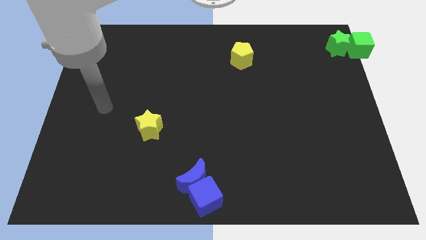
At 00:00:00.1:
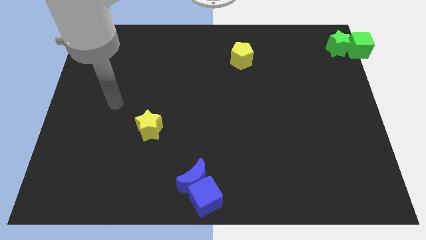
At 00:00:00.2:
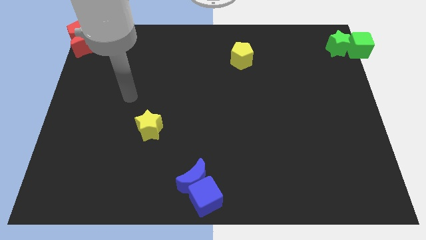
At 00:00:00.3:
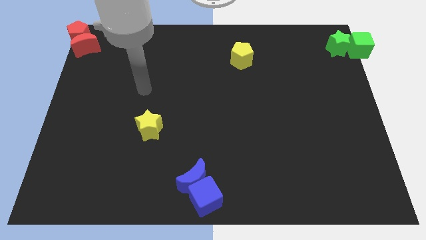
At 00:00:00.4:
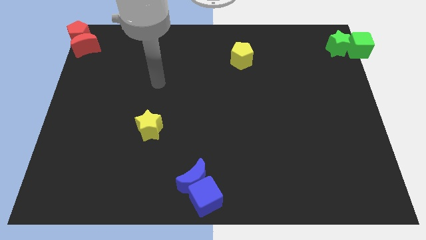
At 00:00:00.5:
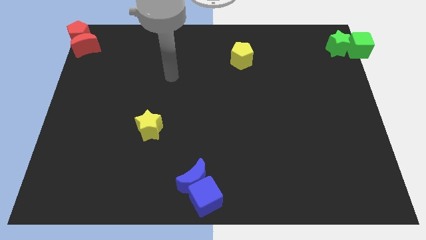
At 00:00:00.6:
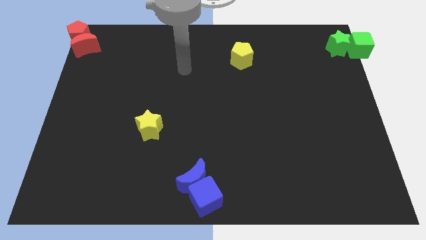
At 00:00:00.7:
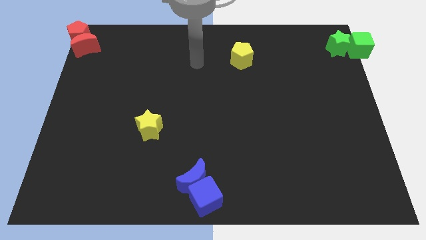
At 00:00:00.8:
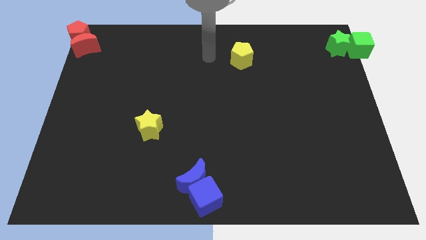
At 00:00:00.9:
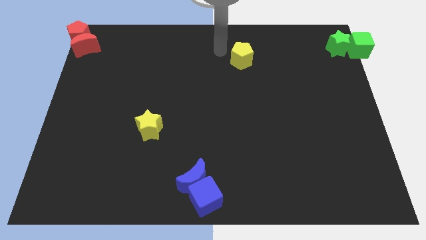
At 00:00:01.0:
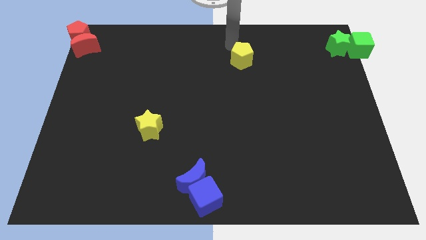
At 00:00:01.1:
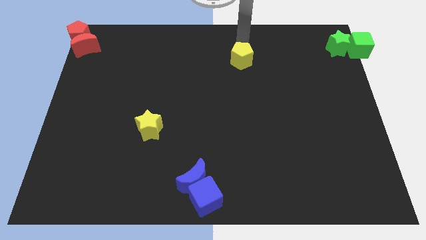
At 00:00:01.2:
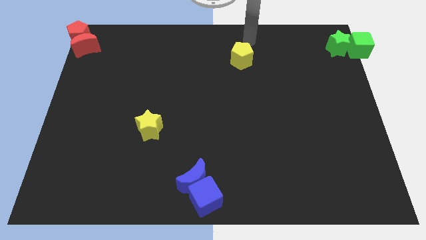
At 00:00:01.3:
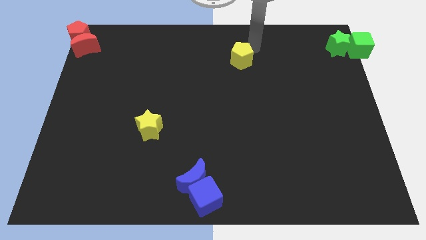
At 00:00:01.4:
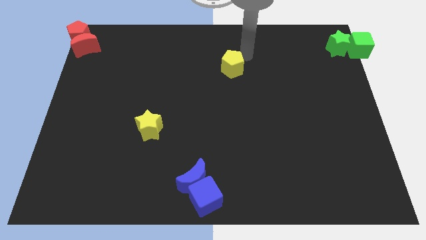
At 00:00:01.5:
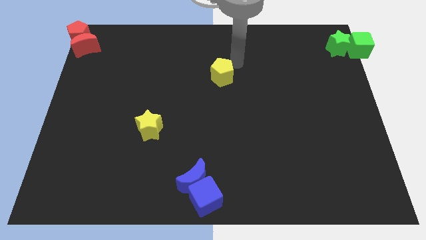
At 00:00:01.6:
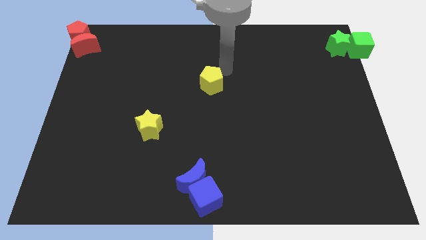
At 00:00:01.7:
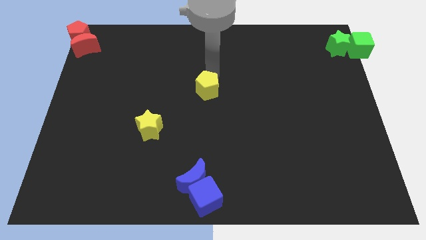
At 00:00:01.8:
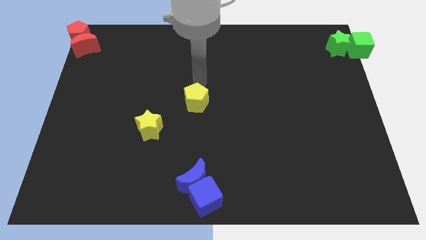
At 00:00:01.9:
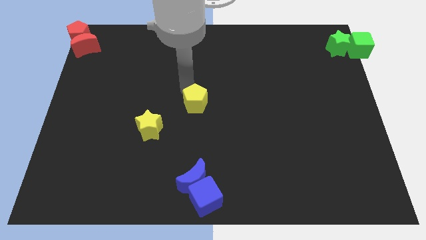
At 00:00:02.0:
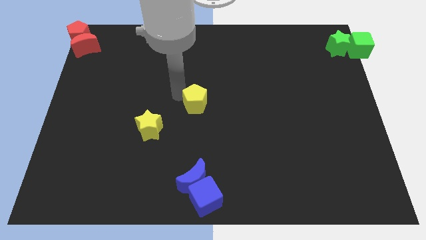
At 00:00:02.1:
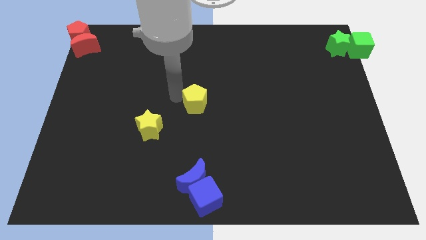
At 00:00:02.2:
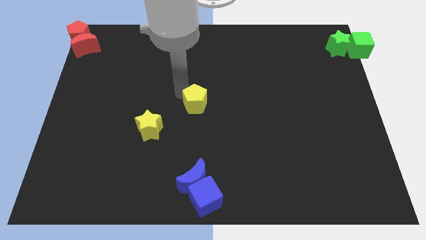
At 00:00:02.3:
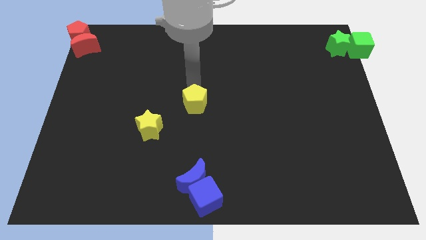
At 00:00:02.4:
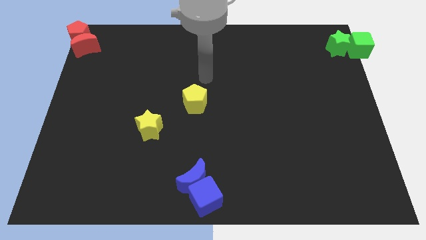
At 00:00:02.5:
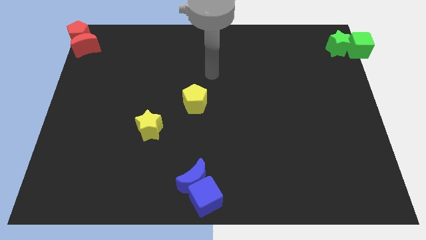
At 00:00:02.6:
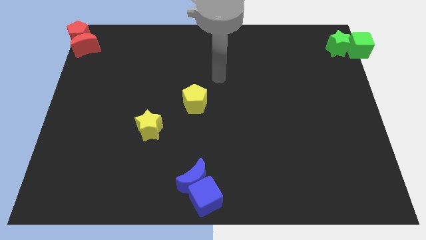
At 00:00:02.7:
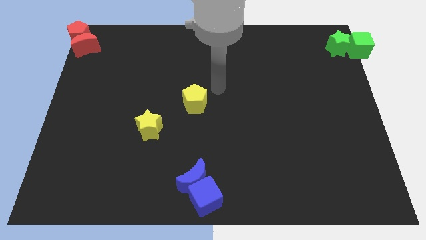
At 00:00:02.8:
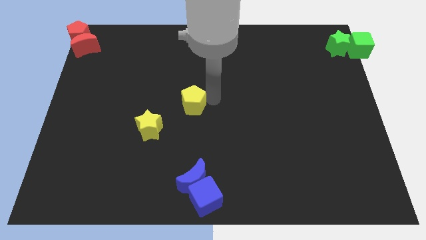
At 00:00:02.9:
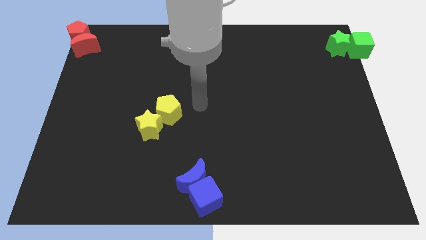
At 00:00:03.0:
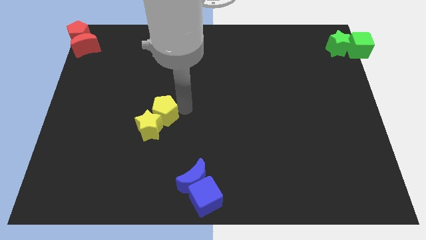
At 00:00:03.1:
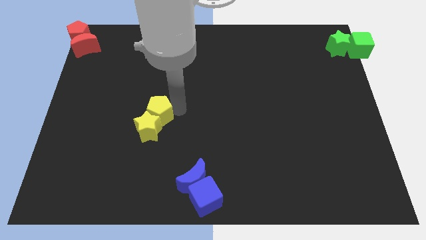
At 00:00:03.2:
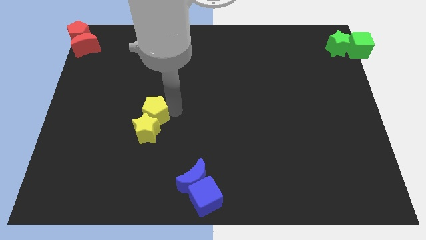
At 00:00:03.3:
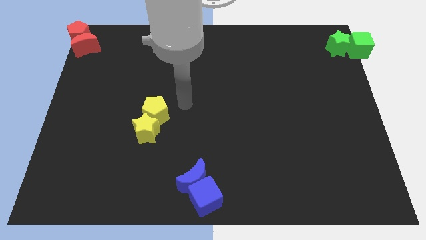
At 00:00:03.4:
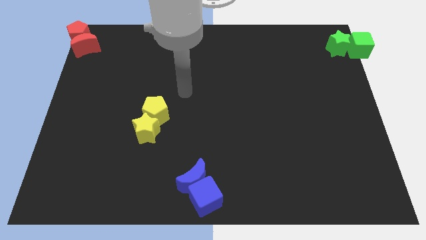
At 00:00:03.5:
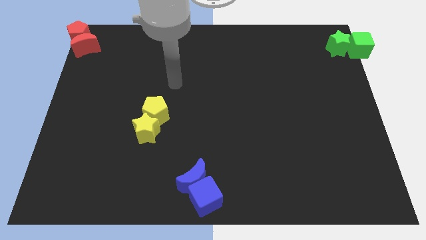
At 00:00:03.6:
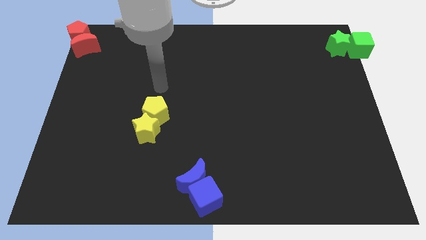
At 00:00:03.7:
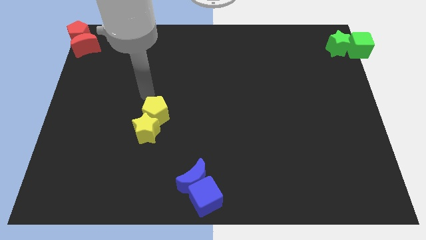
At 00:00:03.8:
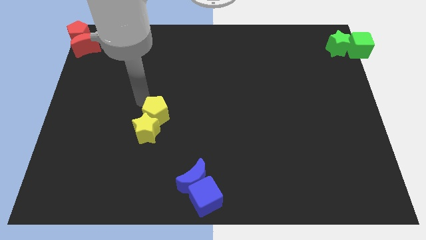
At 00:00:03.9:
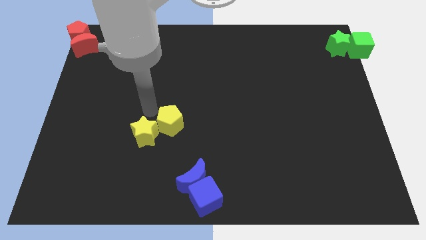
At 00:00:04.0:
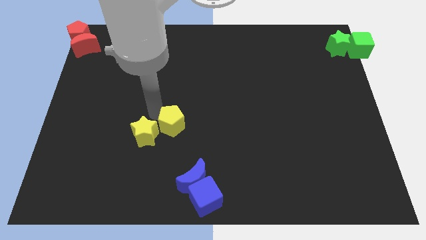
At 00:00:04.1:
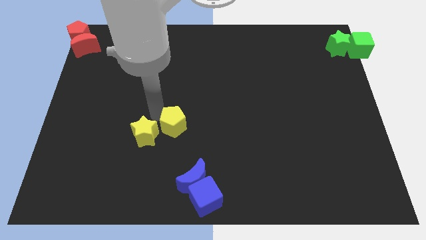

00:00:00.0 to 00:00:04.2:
push the yellow pentagon into the yellow star

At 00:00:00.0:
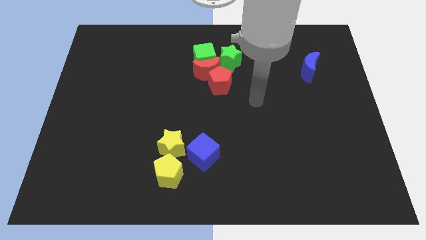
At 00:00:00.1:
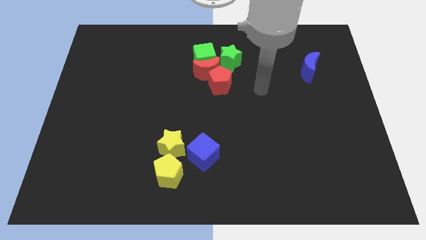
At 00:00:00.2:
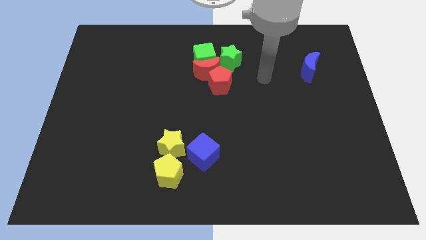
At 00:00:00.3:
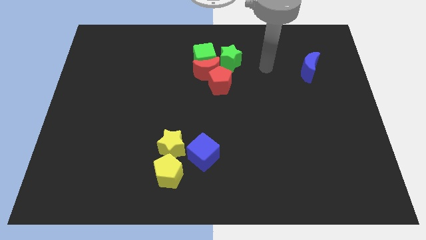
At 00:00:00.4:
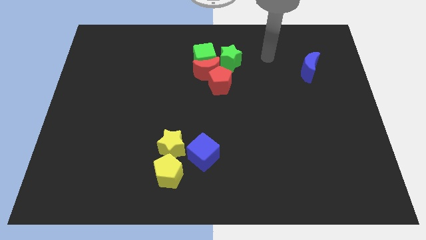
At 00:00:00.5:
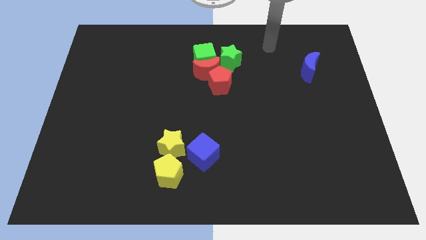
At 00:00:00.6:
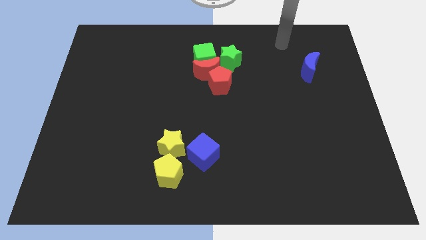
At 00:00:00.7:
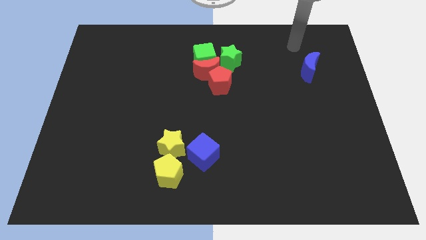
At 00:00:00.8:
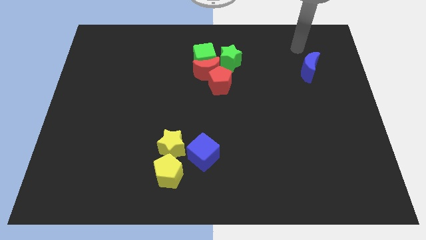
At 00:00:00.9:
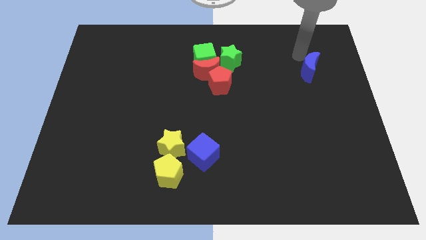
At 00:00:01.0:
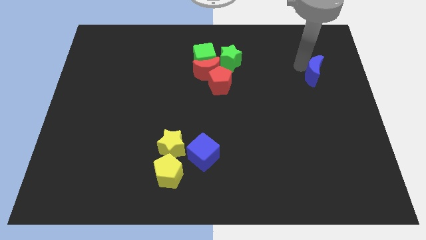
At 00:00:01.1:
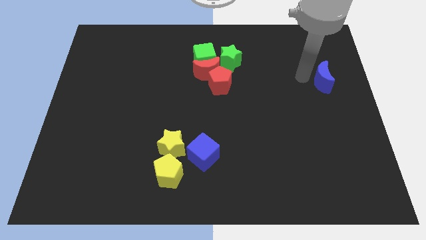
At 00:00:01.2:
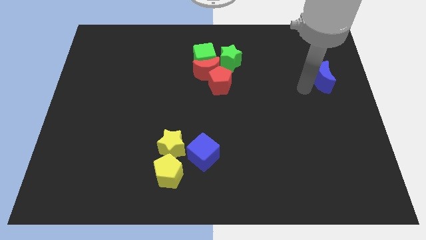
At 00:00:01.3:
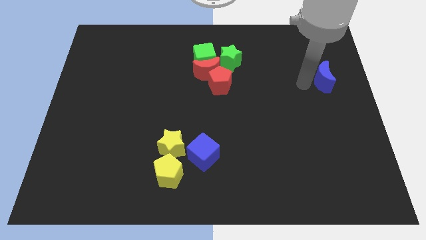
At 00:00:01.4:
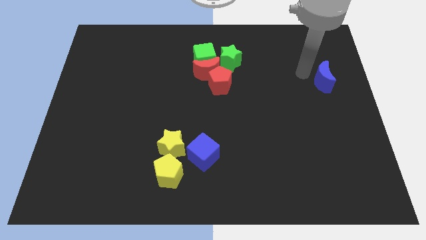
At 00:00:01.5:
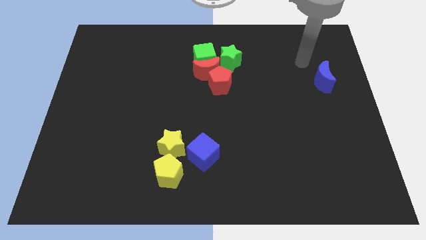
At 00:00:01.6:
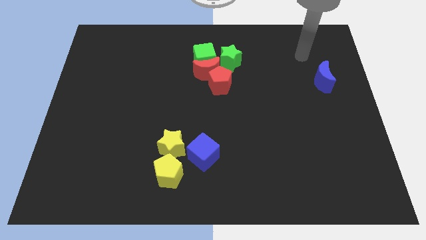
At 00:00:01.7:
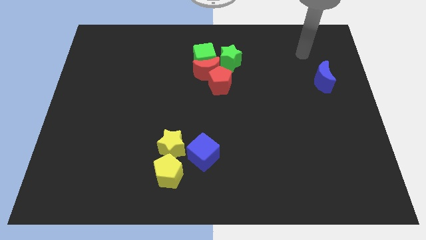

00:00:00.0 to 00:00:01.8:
move your arm towards the blue moon

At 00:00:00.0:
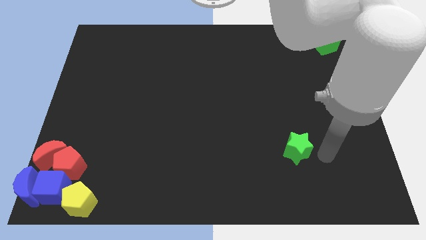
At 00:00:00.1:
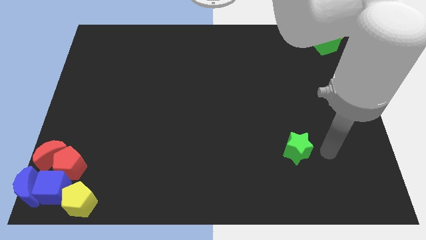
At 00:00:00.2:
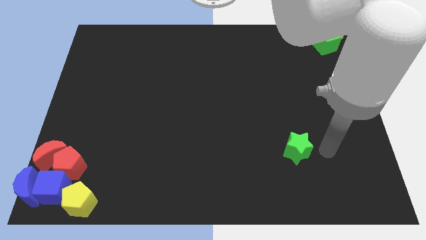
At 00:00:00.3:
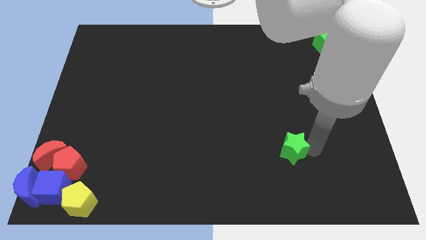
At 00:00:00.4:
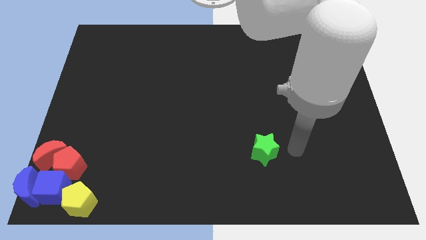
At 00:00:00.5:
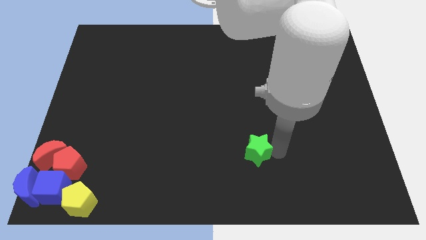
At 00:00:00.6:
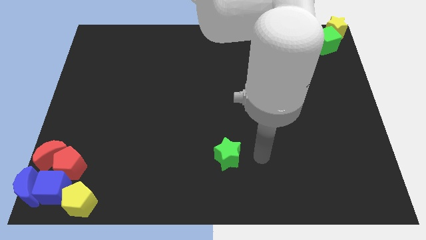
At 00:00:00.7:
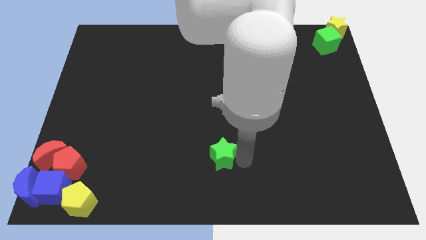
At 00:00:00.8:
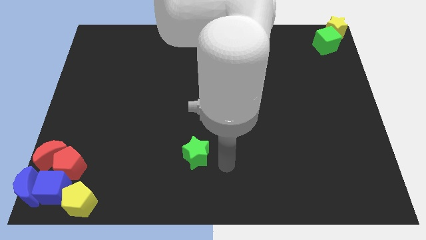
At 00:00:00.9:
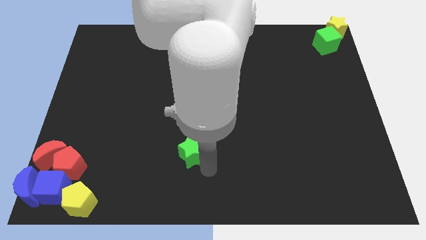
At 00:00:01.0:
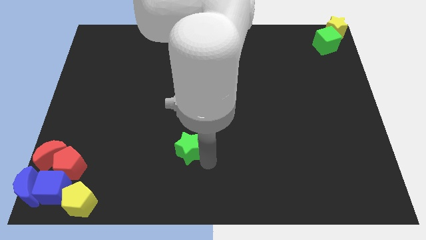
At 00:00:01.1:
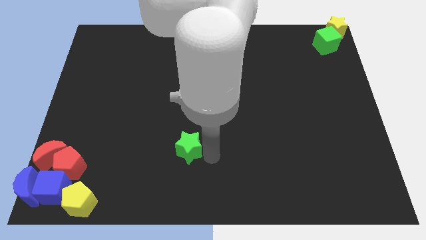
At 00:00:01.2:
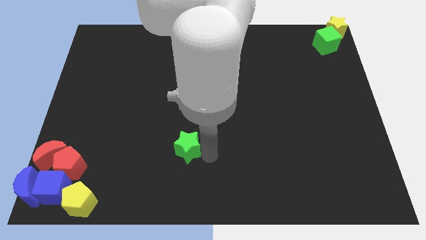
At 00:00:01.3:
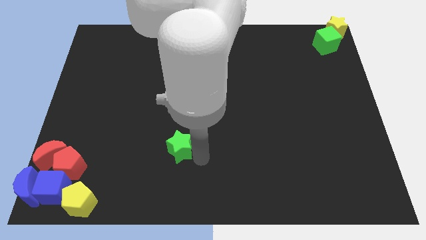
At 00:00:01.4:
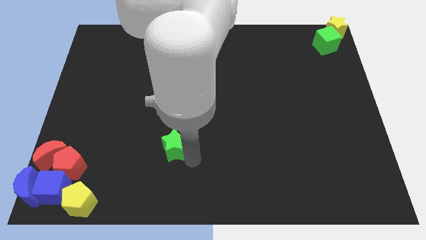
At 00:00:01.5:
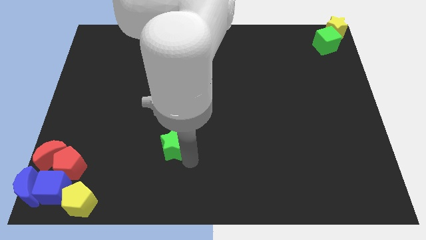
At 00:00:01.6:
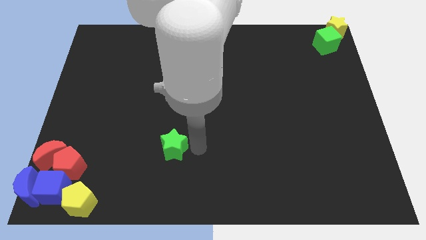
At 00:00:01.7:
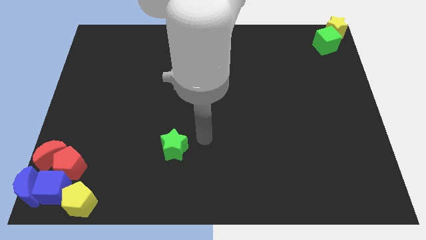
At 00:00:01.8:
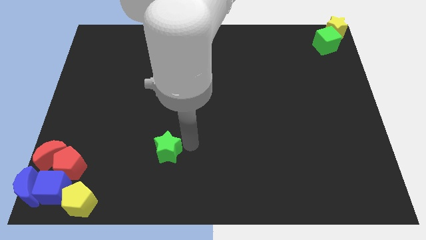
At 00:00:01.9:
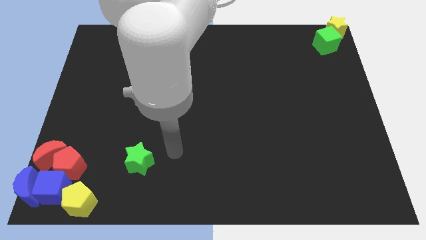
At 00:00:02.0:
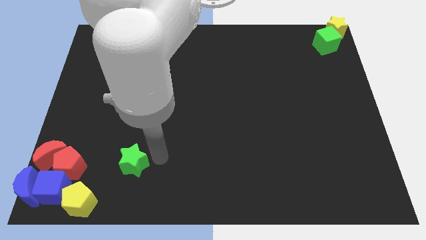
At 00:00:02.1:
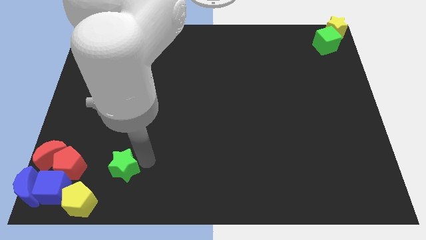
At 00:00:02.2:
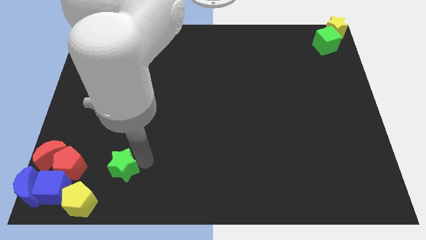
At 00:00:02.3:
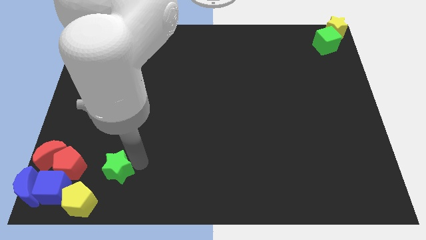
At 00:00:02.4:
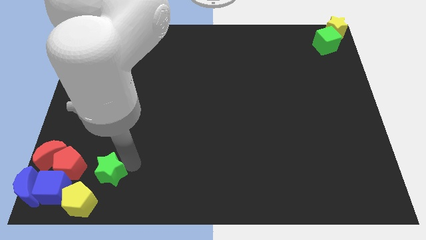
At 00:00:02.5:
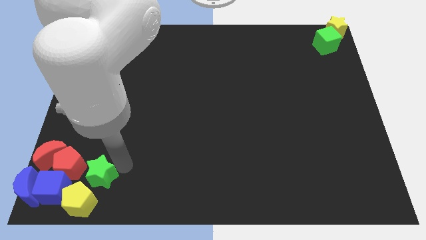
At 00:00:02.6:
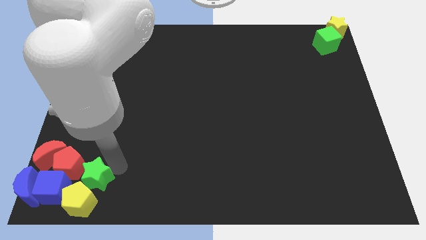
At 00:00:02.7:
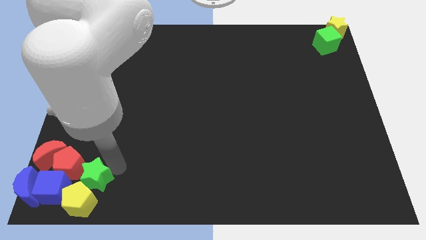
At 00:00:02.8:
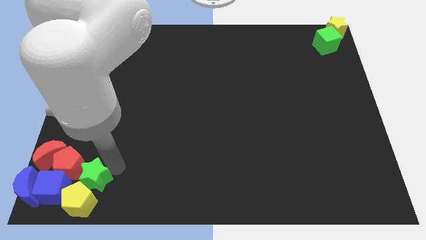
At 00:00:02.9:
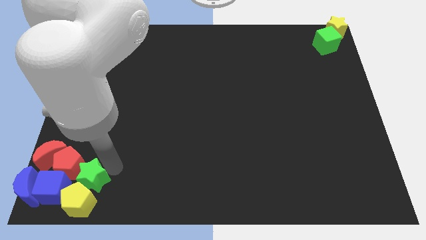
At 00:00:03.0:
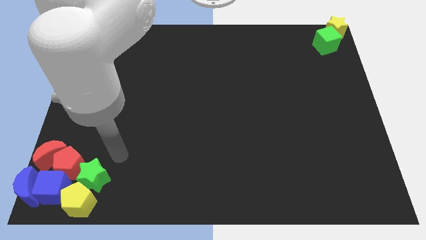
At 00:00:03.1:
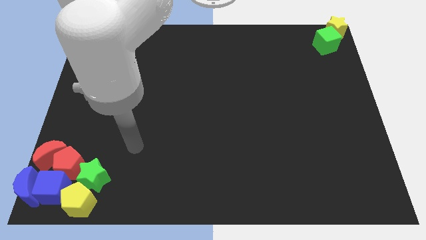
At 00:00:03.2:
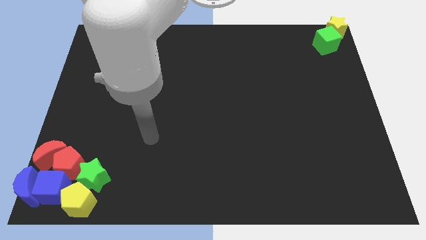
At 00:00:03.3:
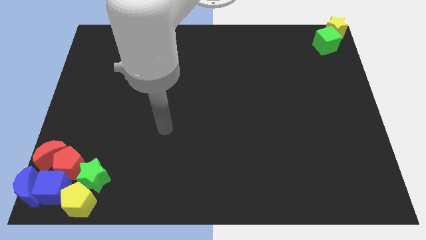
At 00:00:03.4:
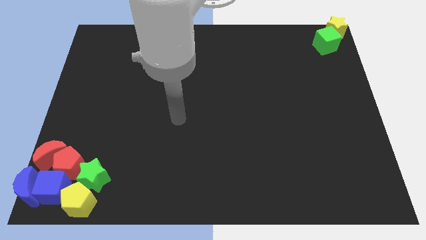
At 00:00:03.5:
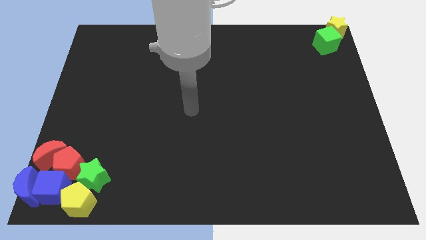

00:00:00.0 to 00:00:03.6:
push the green star to the top of the yellow pentagon
